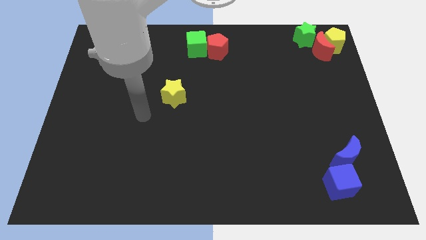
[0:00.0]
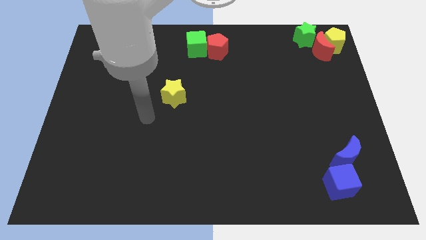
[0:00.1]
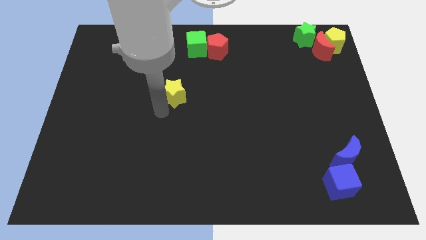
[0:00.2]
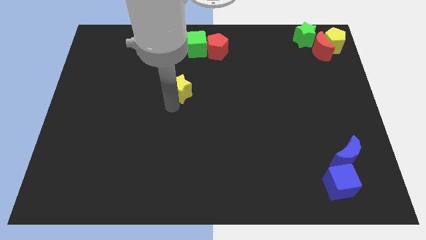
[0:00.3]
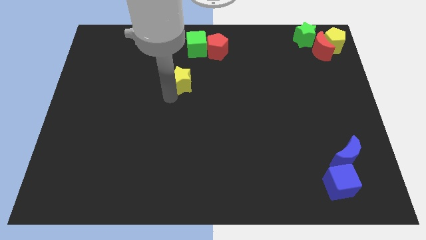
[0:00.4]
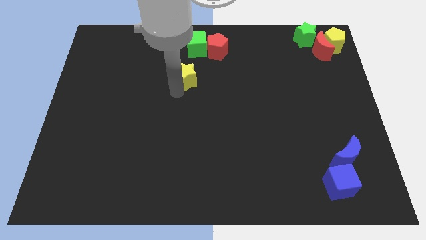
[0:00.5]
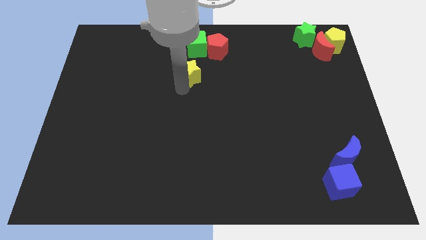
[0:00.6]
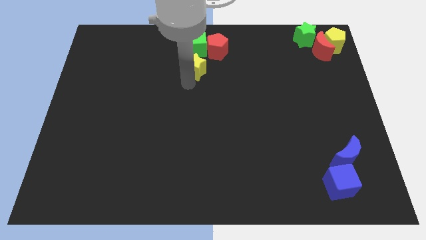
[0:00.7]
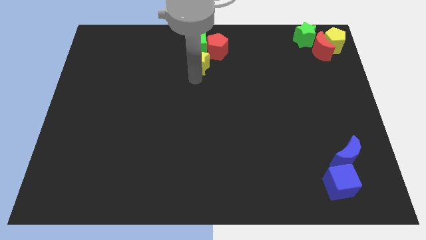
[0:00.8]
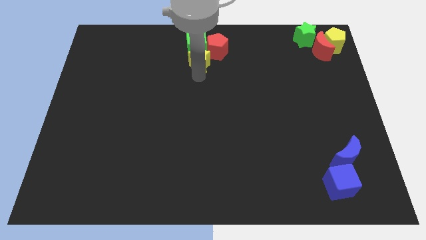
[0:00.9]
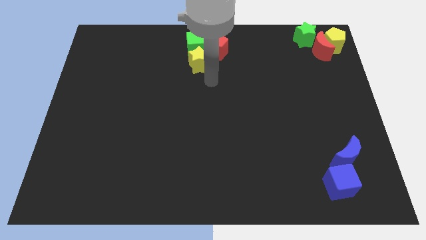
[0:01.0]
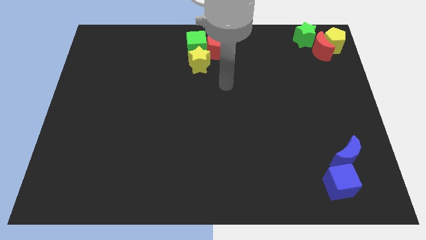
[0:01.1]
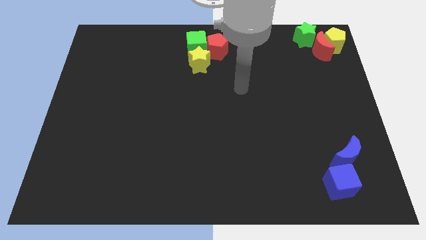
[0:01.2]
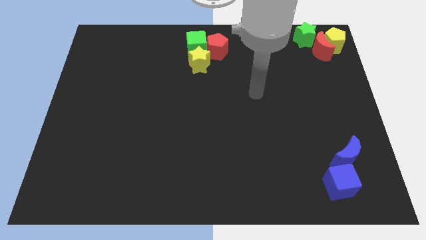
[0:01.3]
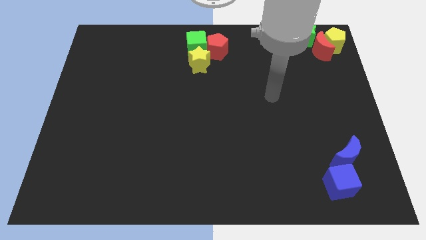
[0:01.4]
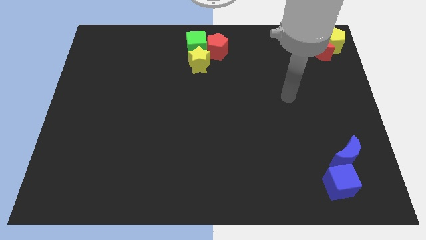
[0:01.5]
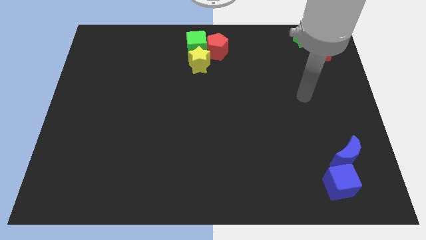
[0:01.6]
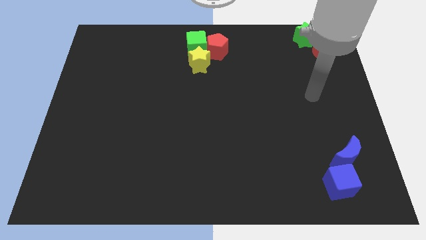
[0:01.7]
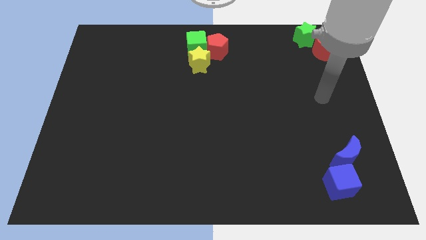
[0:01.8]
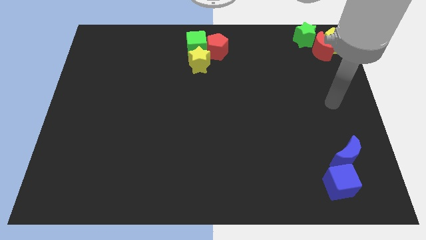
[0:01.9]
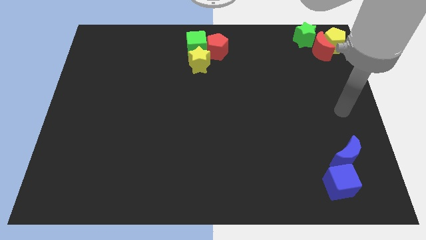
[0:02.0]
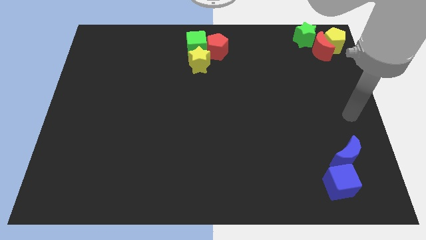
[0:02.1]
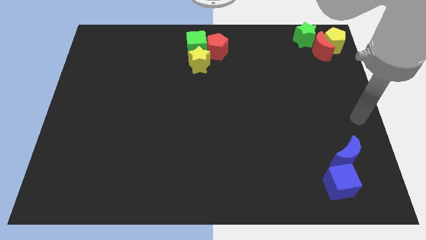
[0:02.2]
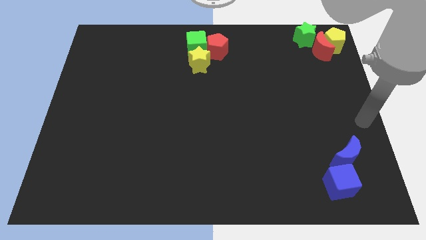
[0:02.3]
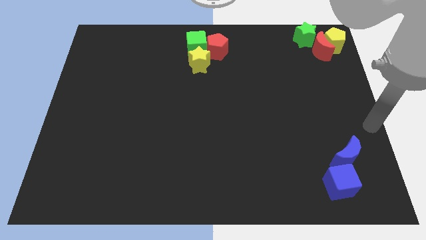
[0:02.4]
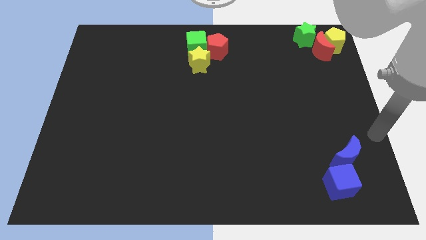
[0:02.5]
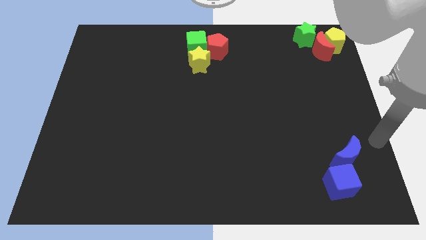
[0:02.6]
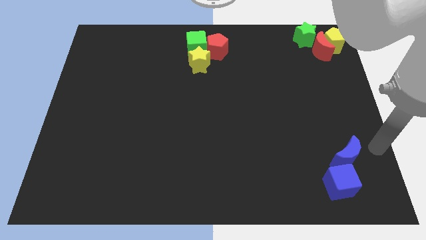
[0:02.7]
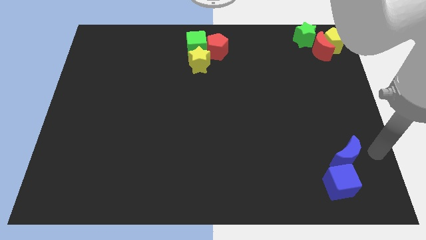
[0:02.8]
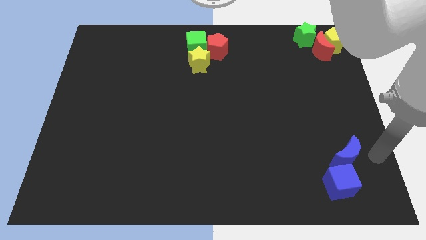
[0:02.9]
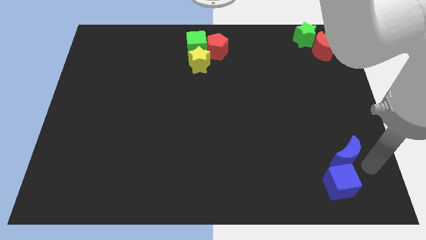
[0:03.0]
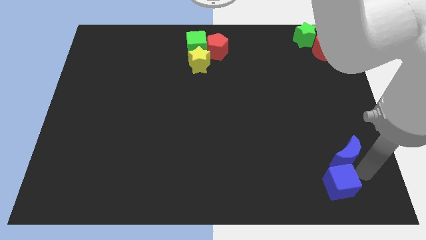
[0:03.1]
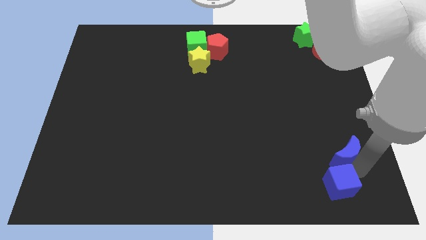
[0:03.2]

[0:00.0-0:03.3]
move the yellow star to the bottom side of the green cube

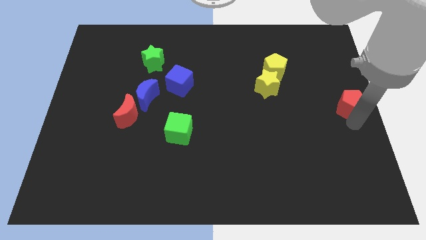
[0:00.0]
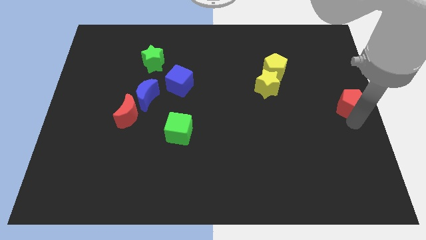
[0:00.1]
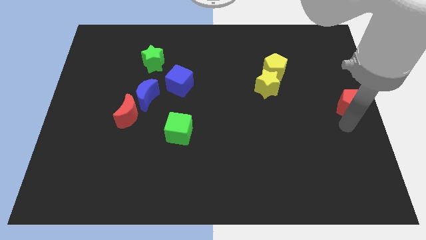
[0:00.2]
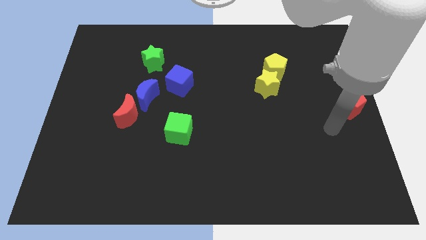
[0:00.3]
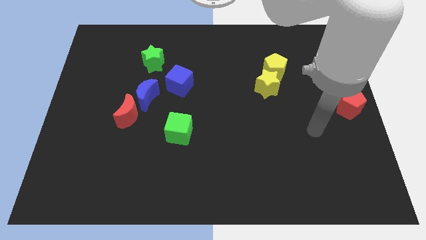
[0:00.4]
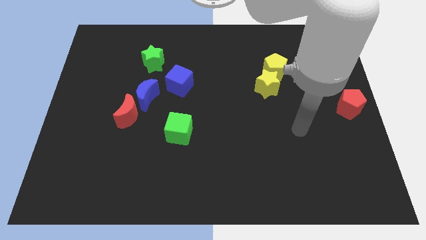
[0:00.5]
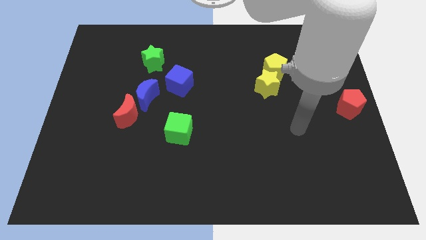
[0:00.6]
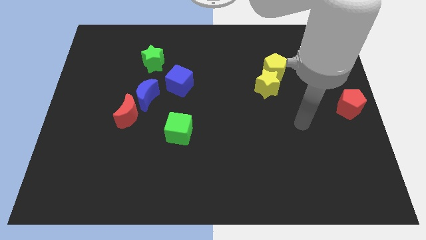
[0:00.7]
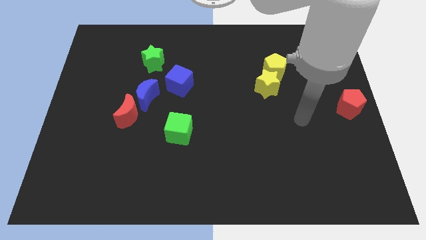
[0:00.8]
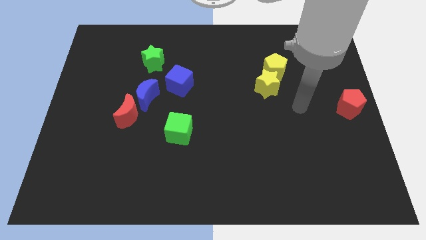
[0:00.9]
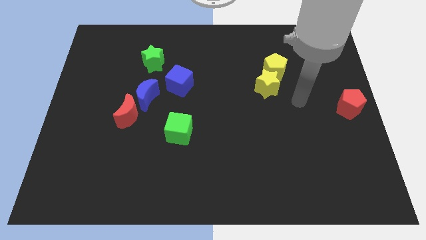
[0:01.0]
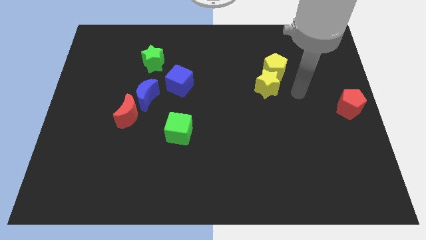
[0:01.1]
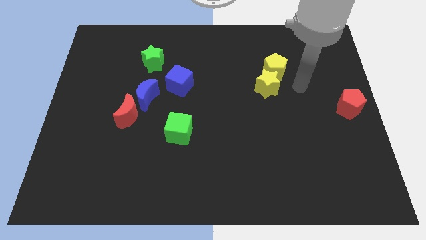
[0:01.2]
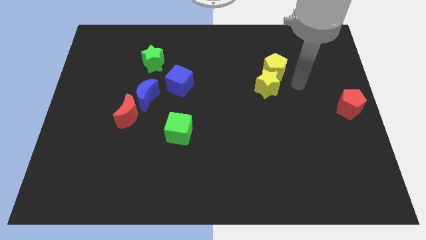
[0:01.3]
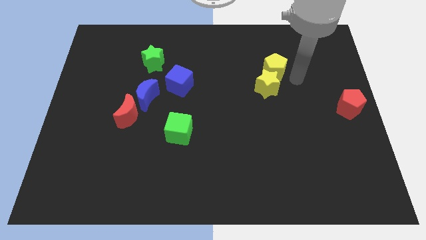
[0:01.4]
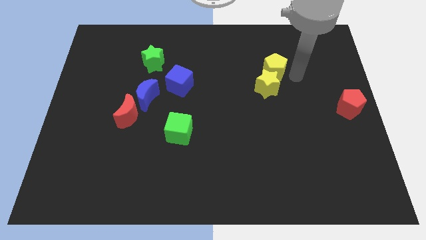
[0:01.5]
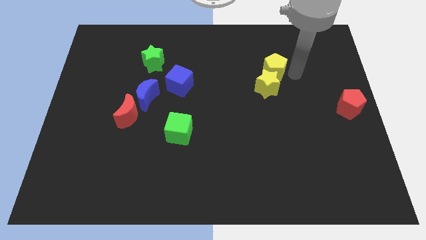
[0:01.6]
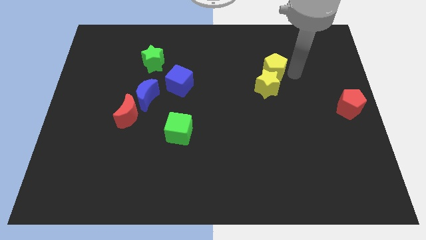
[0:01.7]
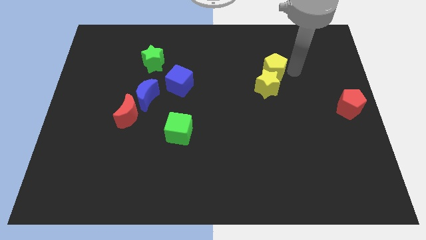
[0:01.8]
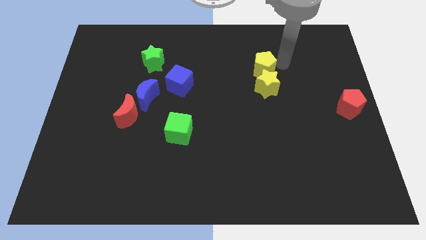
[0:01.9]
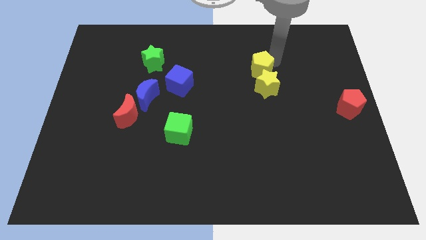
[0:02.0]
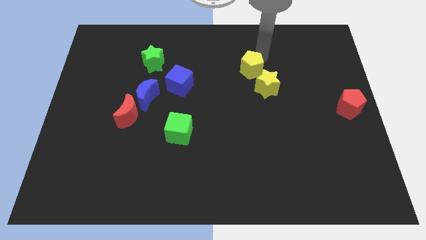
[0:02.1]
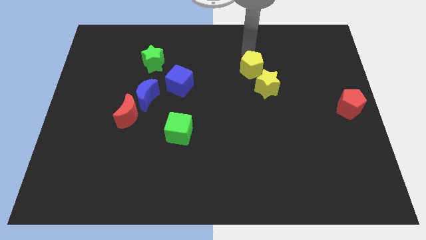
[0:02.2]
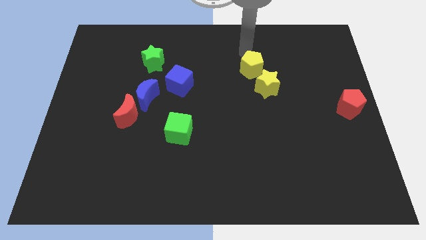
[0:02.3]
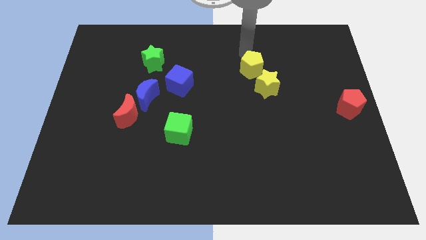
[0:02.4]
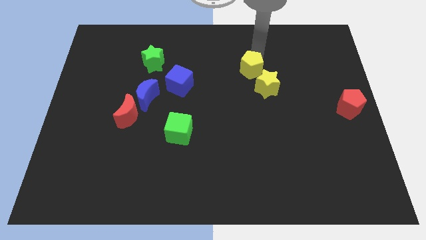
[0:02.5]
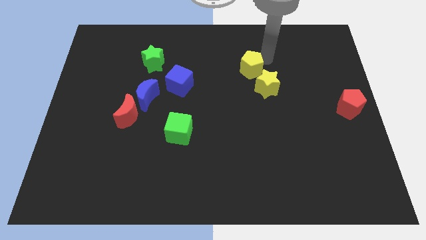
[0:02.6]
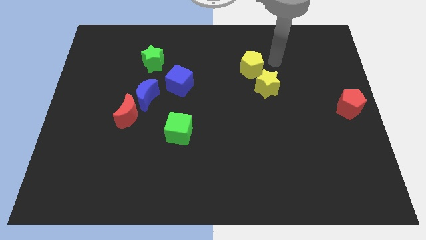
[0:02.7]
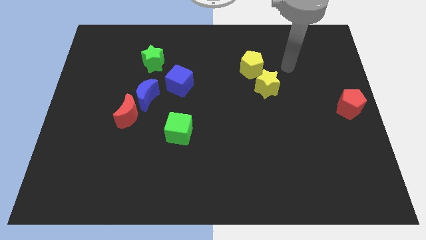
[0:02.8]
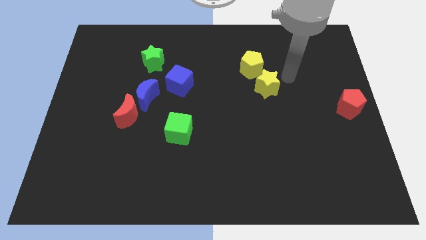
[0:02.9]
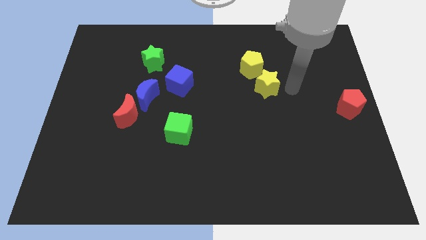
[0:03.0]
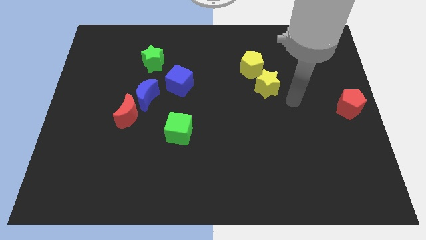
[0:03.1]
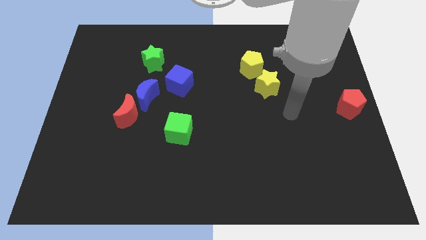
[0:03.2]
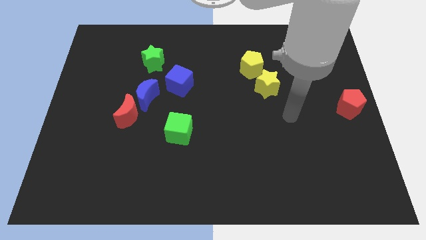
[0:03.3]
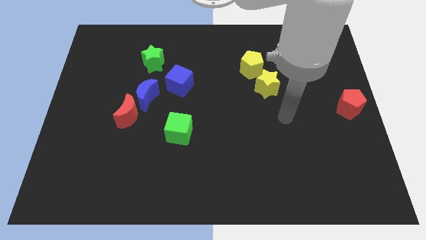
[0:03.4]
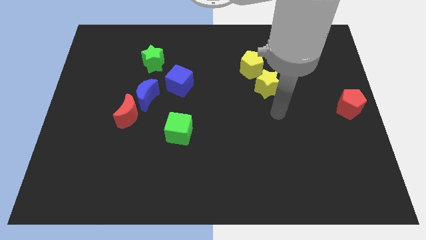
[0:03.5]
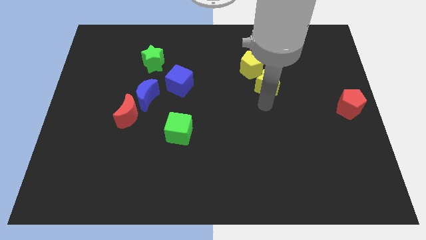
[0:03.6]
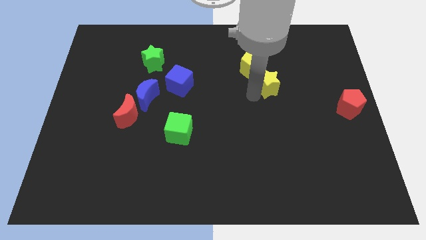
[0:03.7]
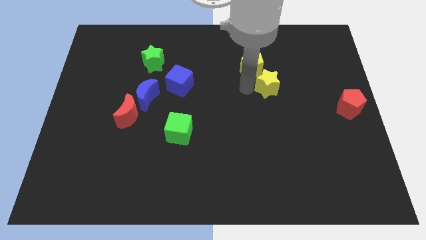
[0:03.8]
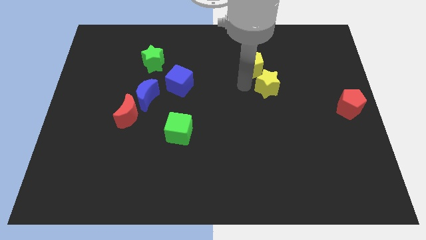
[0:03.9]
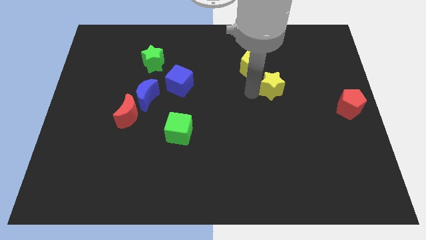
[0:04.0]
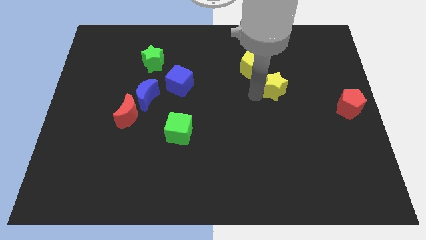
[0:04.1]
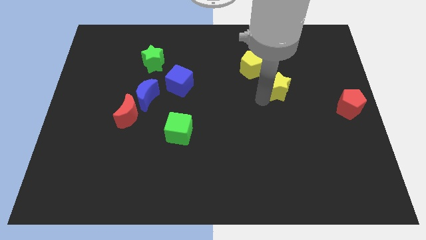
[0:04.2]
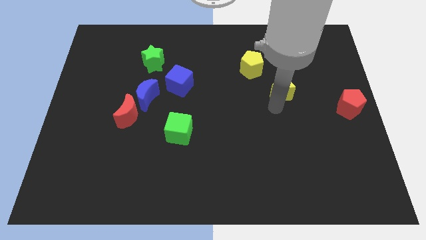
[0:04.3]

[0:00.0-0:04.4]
separate the yellow star and the yellow pentagon

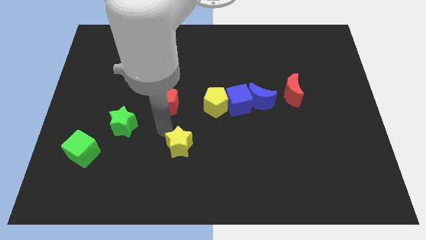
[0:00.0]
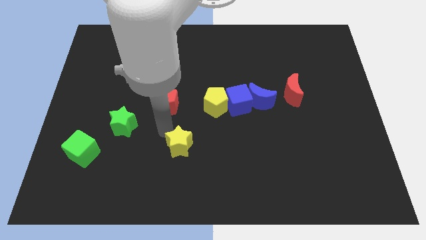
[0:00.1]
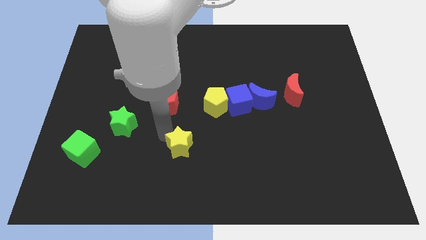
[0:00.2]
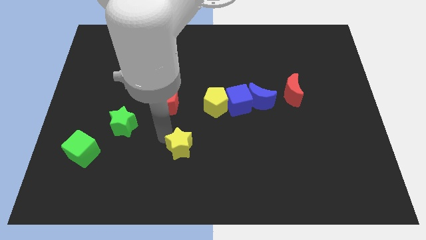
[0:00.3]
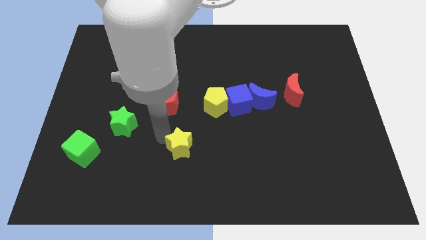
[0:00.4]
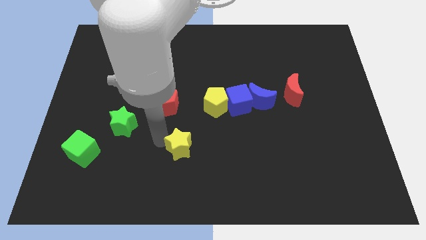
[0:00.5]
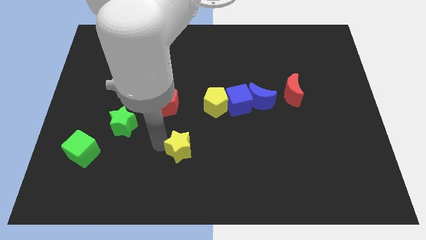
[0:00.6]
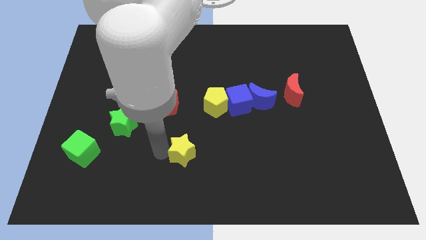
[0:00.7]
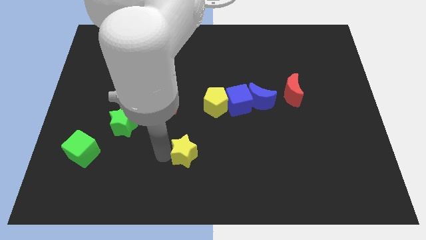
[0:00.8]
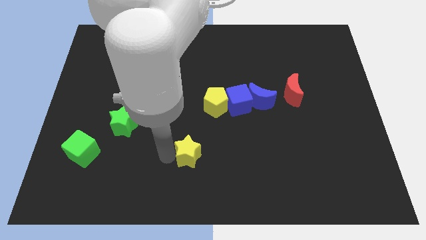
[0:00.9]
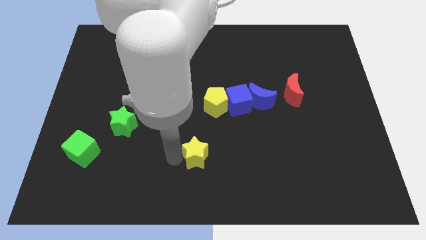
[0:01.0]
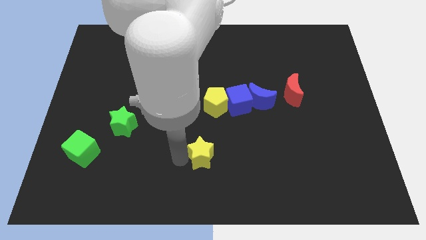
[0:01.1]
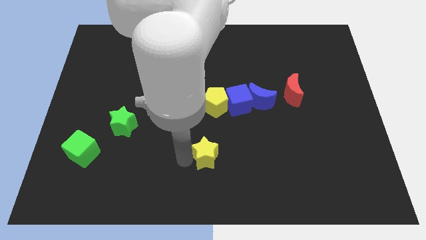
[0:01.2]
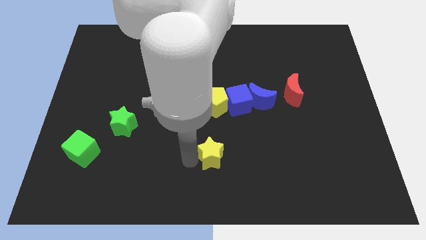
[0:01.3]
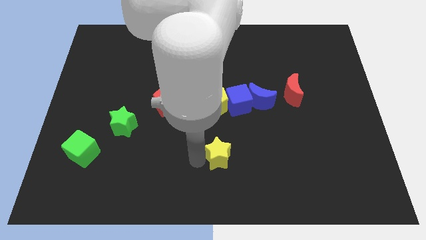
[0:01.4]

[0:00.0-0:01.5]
put the yellow star vertically below the yellow pentagon
